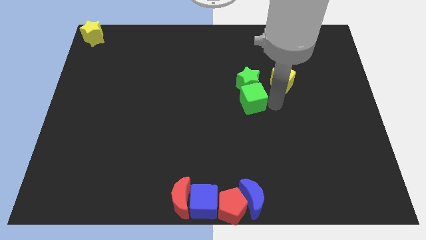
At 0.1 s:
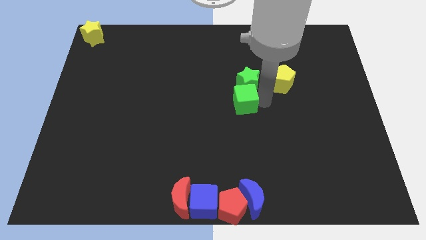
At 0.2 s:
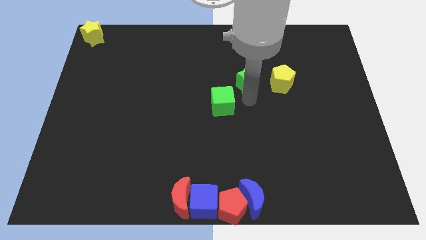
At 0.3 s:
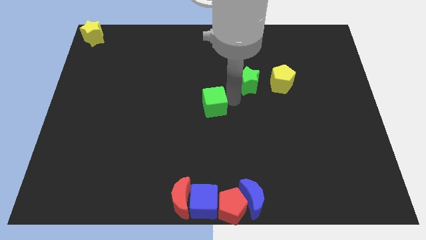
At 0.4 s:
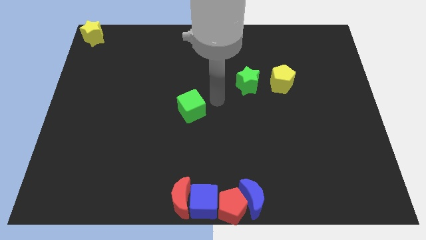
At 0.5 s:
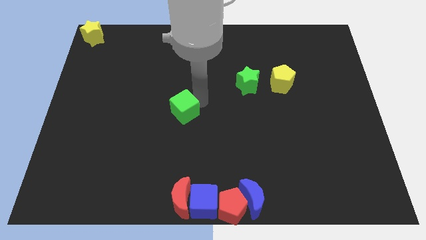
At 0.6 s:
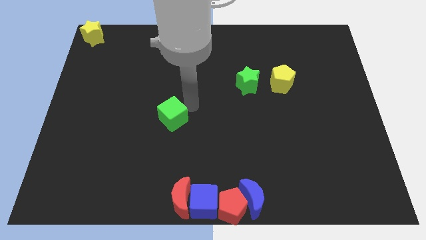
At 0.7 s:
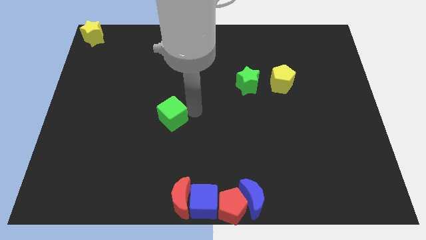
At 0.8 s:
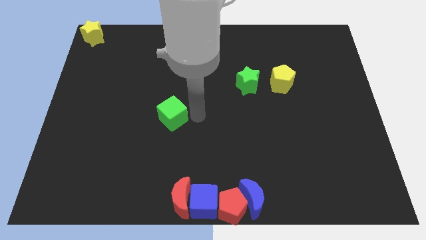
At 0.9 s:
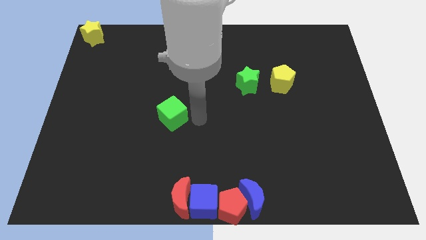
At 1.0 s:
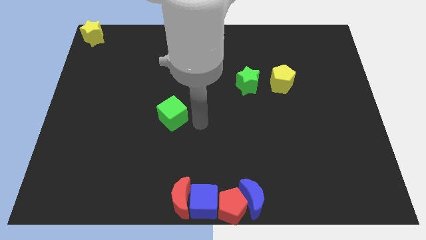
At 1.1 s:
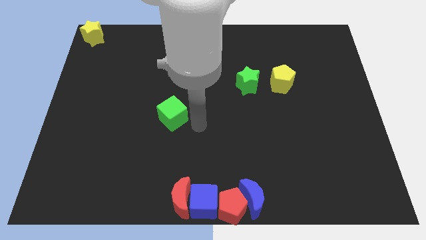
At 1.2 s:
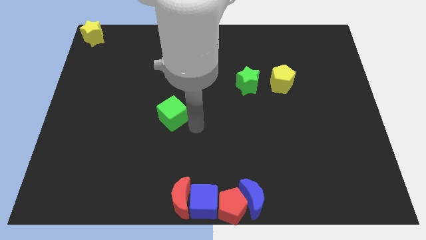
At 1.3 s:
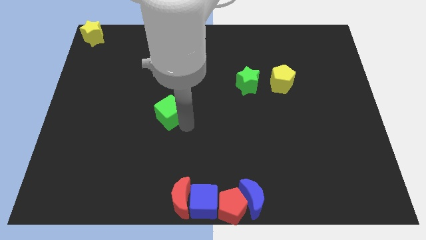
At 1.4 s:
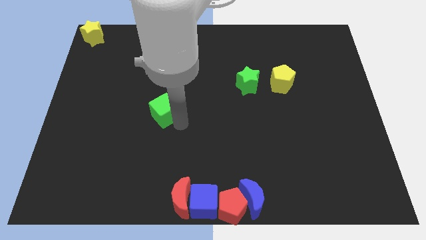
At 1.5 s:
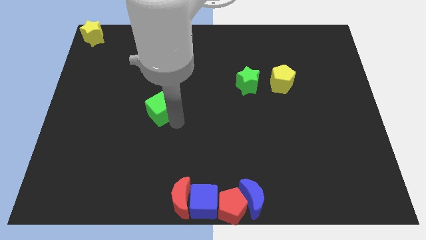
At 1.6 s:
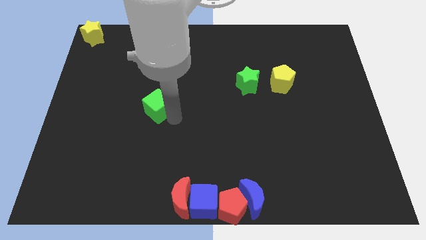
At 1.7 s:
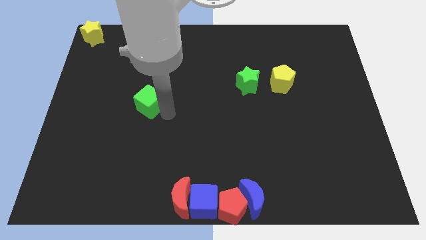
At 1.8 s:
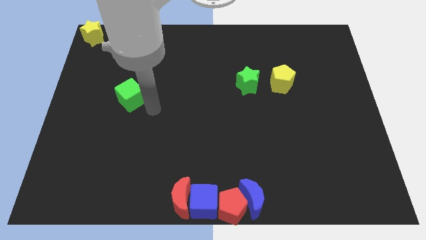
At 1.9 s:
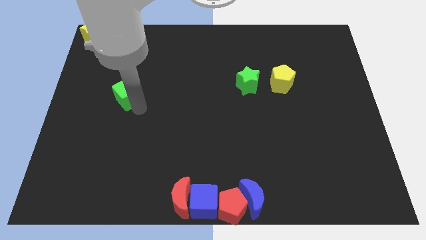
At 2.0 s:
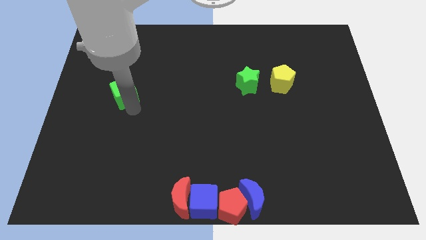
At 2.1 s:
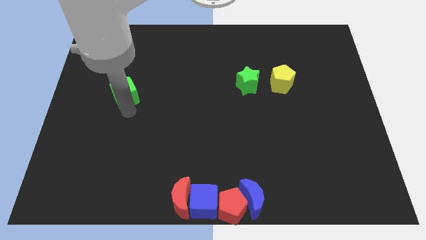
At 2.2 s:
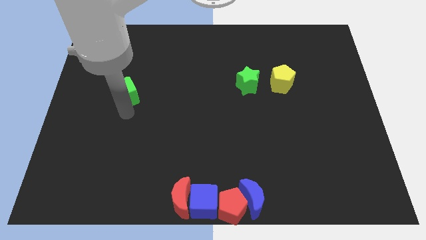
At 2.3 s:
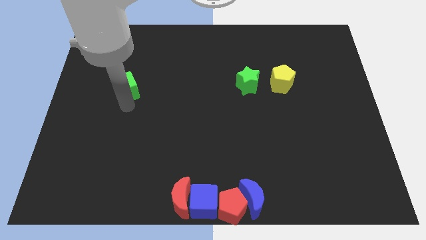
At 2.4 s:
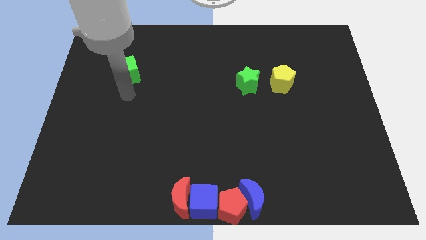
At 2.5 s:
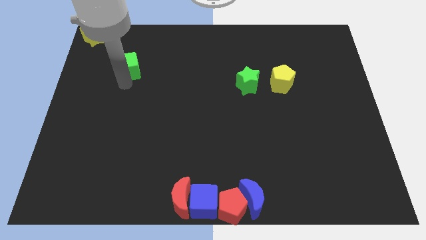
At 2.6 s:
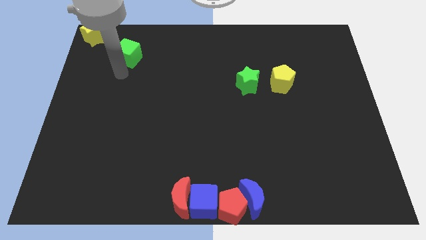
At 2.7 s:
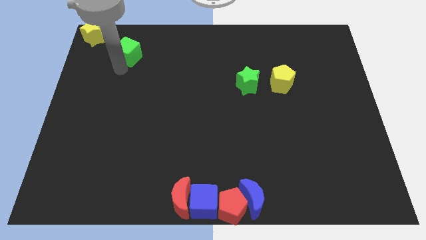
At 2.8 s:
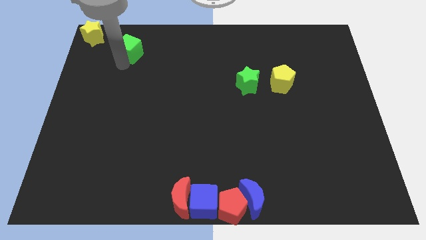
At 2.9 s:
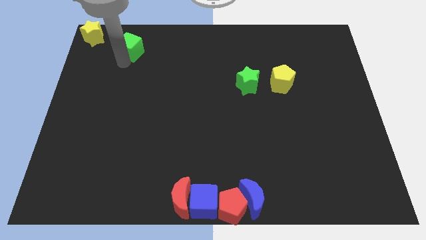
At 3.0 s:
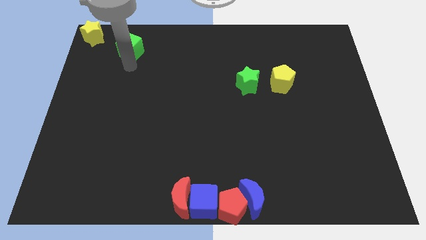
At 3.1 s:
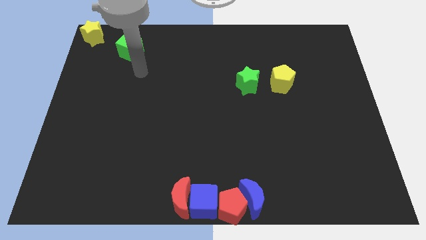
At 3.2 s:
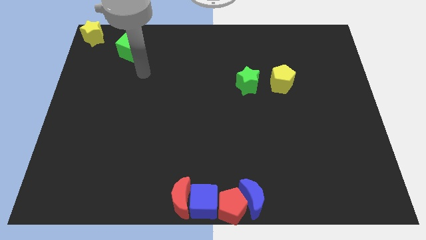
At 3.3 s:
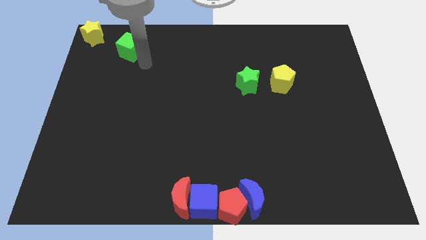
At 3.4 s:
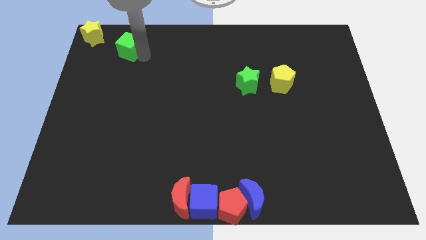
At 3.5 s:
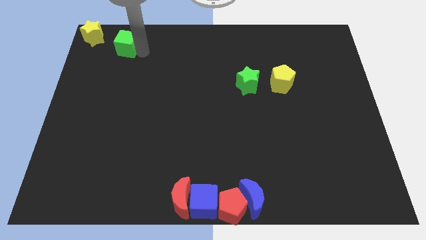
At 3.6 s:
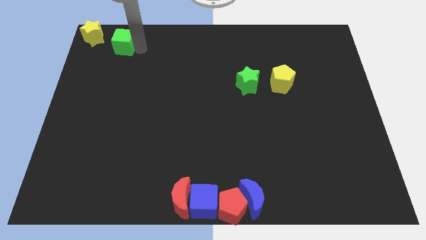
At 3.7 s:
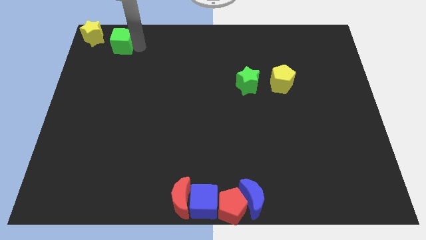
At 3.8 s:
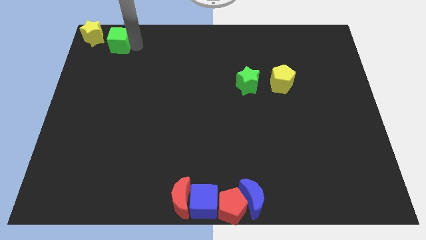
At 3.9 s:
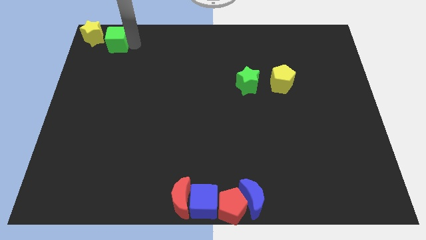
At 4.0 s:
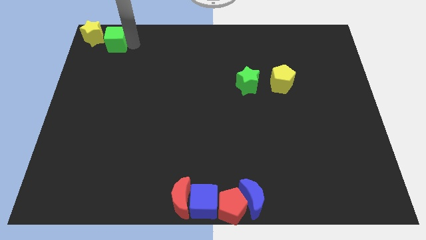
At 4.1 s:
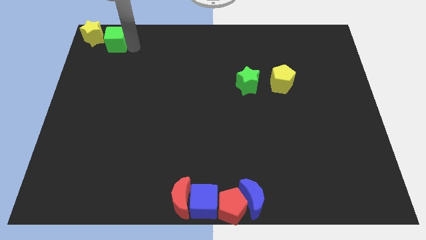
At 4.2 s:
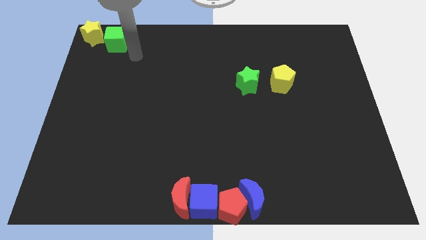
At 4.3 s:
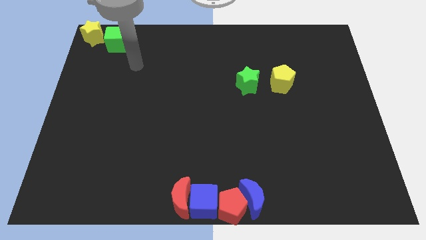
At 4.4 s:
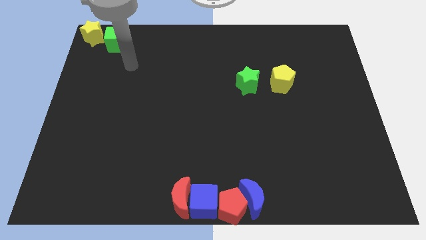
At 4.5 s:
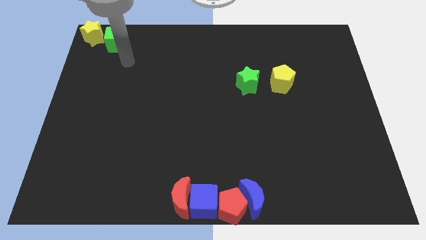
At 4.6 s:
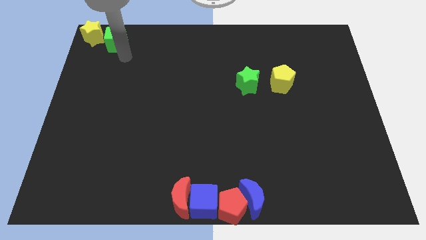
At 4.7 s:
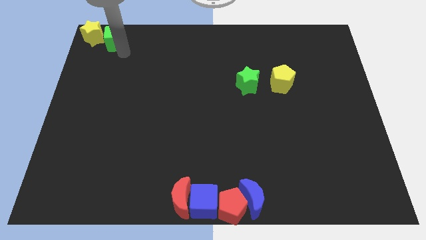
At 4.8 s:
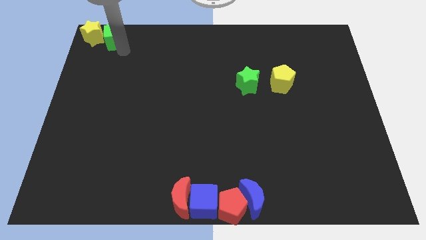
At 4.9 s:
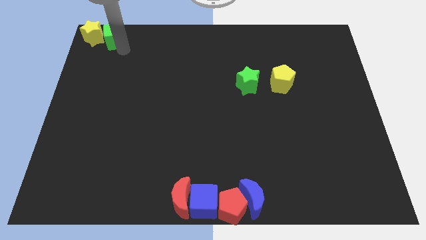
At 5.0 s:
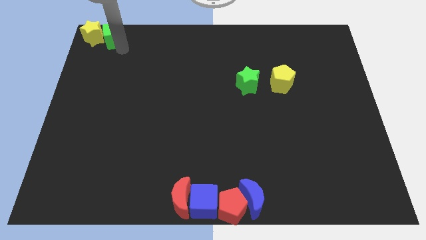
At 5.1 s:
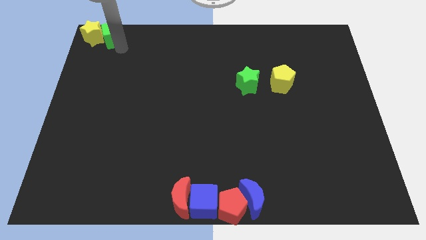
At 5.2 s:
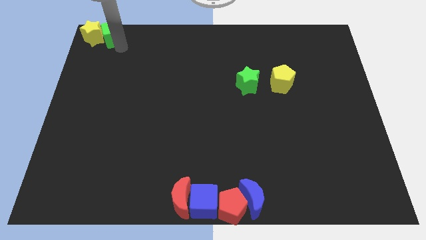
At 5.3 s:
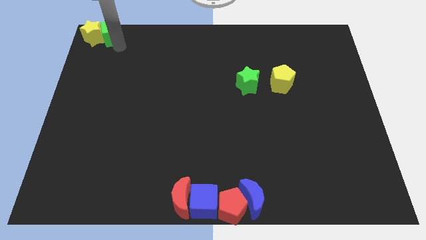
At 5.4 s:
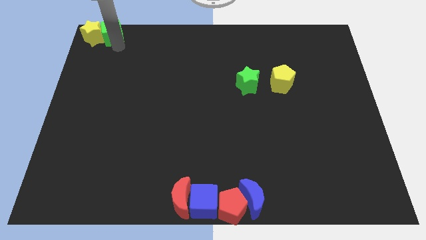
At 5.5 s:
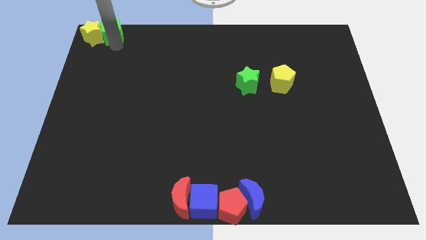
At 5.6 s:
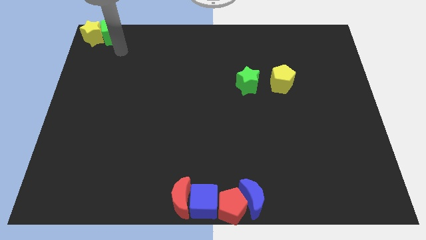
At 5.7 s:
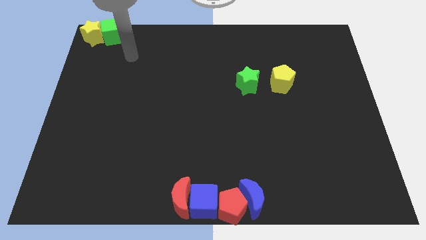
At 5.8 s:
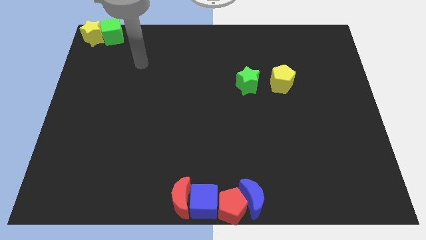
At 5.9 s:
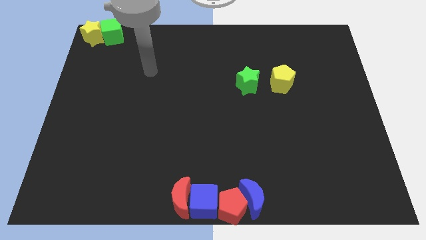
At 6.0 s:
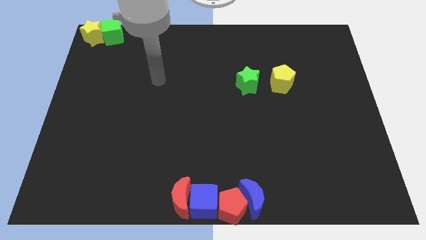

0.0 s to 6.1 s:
push green cube into yellow star

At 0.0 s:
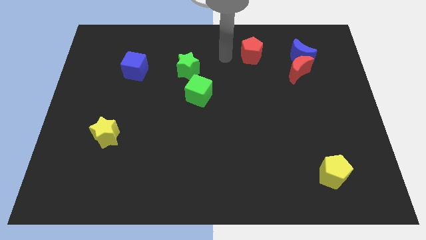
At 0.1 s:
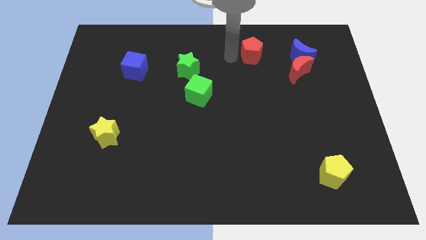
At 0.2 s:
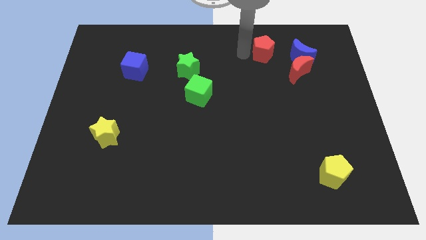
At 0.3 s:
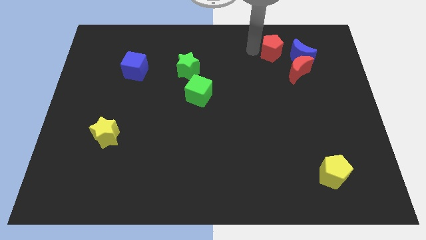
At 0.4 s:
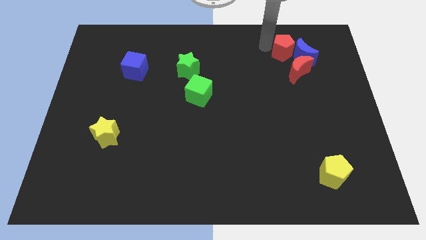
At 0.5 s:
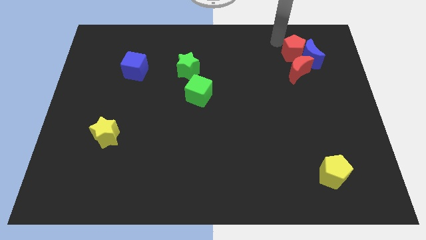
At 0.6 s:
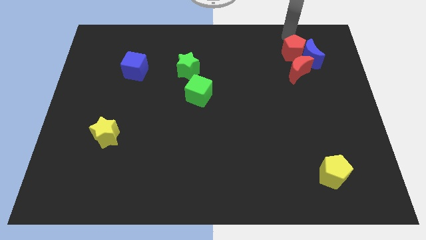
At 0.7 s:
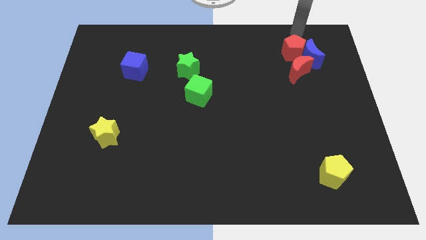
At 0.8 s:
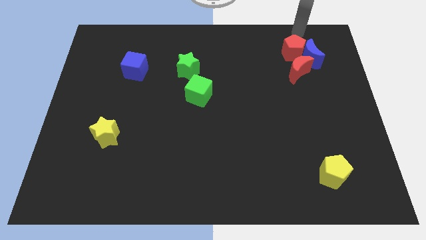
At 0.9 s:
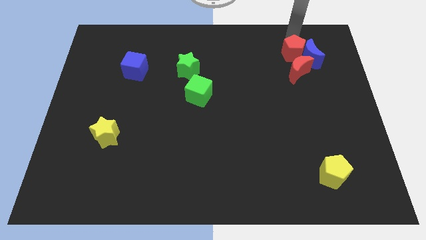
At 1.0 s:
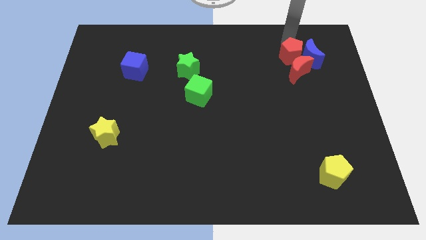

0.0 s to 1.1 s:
push the red pentagon into the blue crescent

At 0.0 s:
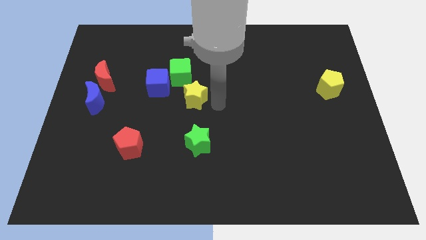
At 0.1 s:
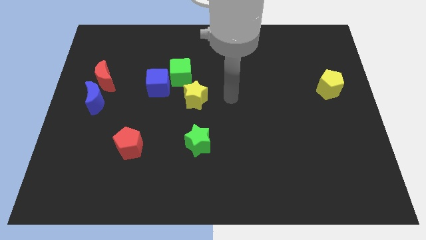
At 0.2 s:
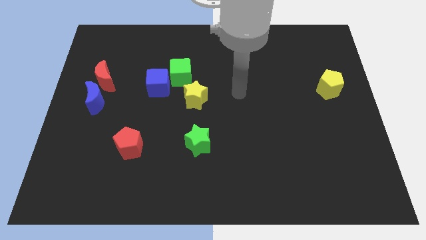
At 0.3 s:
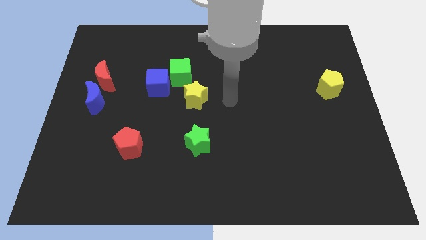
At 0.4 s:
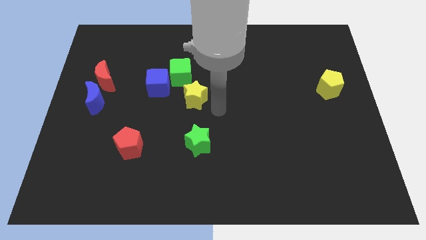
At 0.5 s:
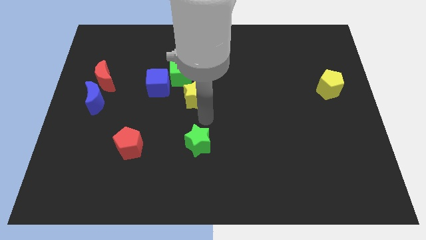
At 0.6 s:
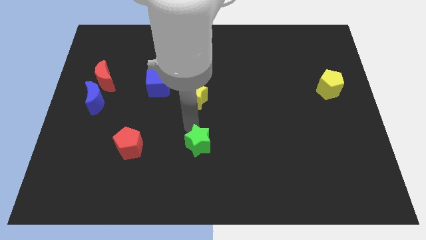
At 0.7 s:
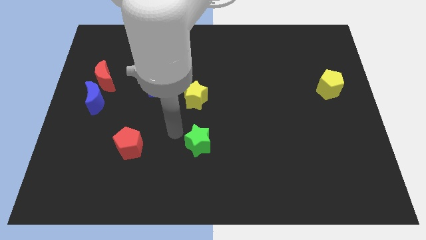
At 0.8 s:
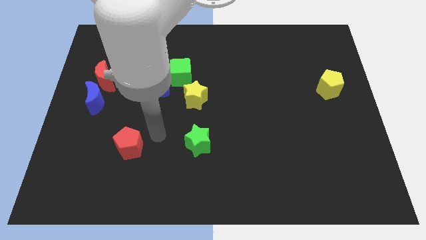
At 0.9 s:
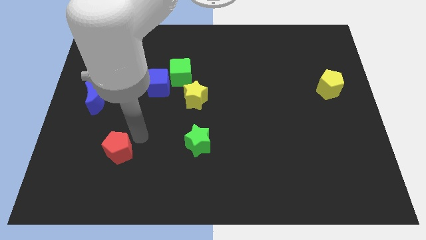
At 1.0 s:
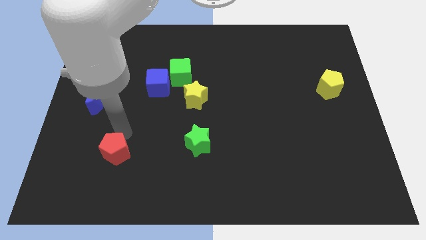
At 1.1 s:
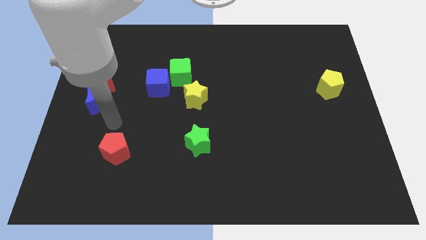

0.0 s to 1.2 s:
slightly push the red pentagon towards the bottom left side of the board

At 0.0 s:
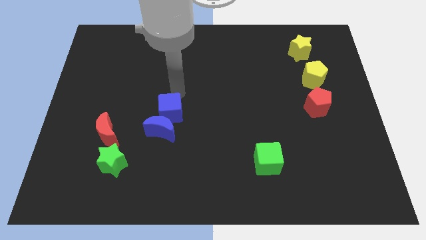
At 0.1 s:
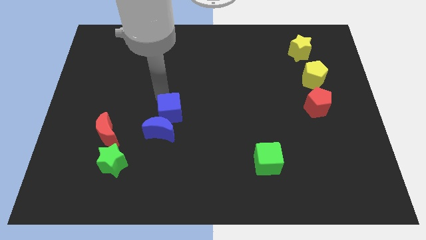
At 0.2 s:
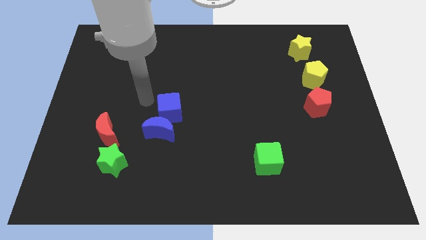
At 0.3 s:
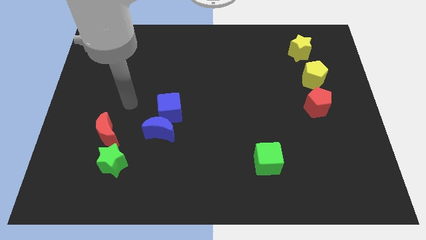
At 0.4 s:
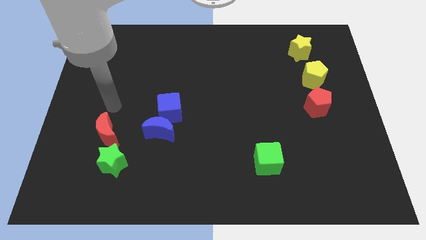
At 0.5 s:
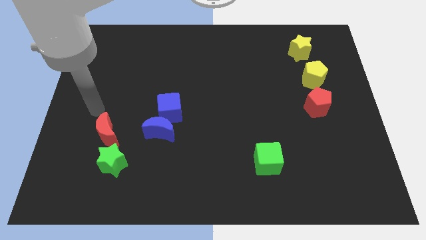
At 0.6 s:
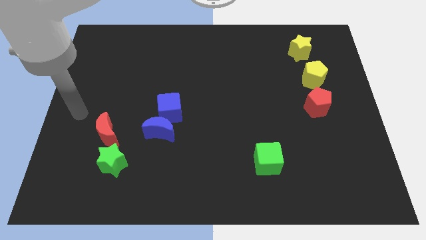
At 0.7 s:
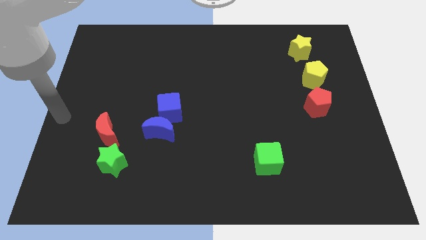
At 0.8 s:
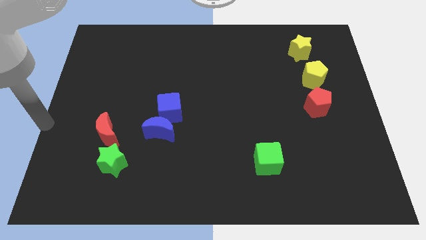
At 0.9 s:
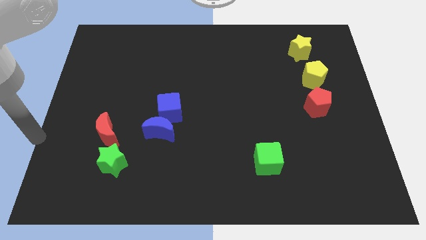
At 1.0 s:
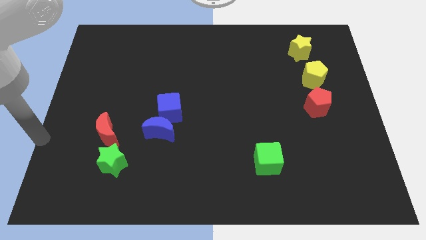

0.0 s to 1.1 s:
move your arm away from blue blocks
